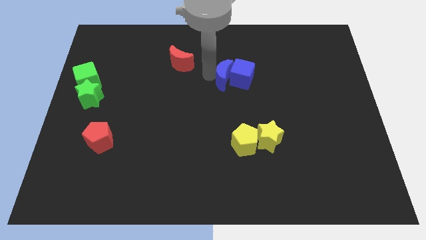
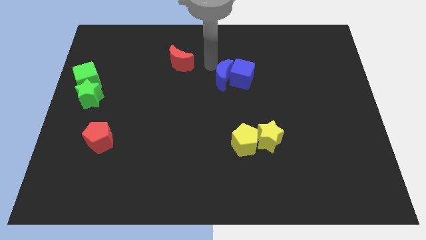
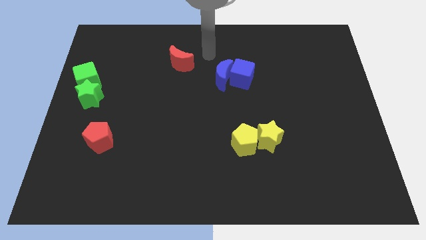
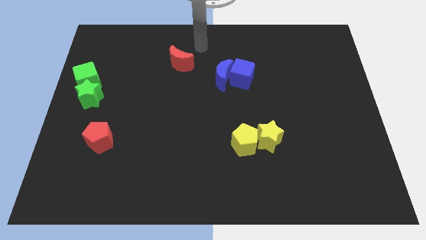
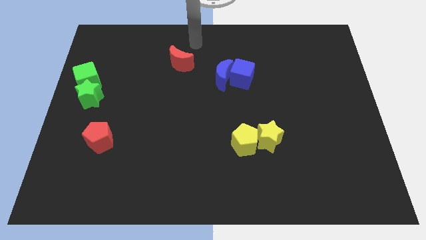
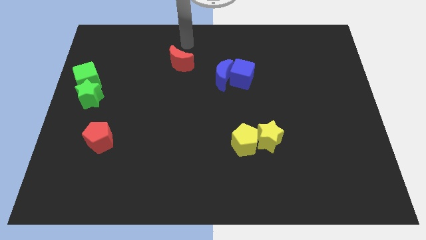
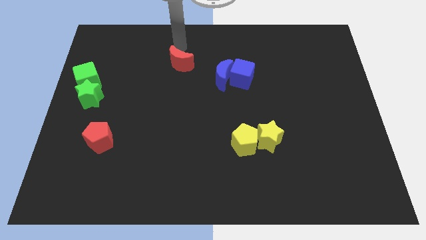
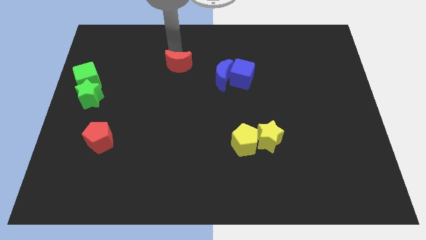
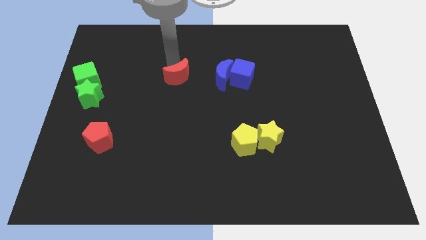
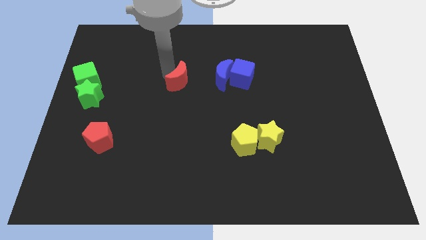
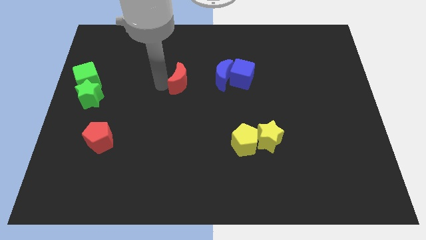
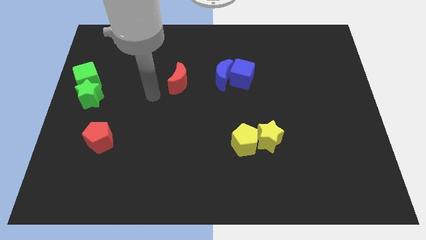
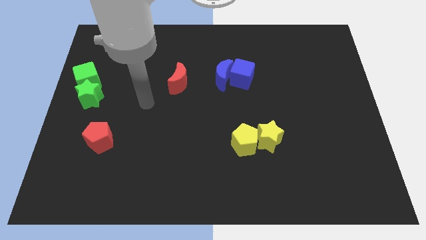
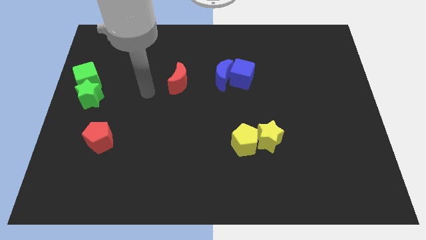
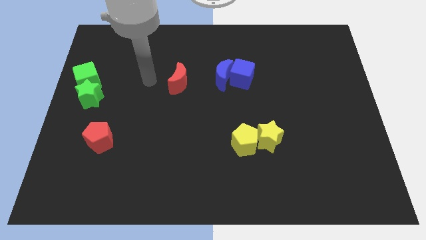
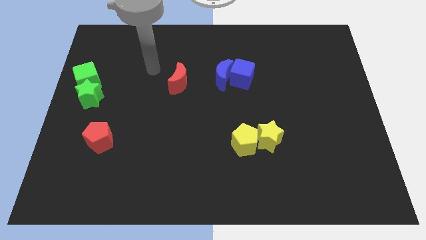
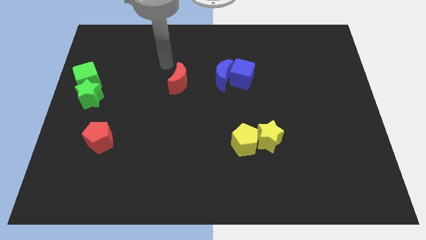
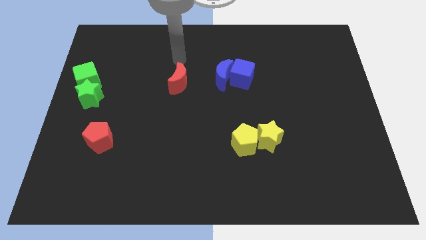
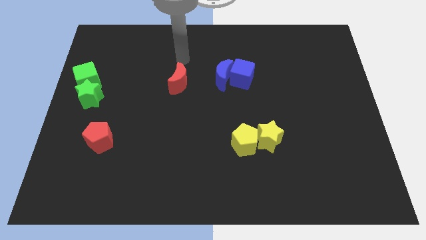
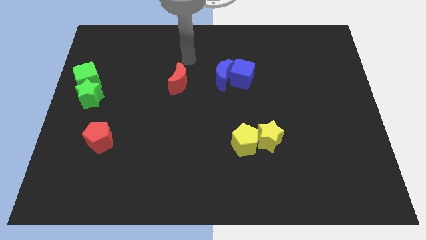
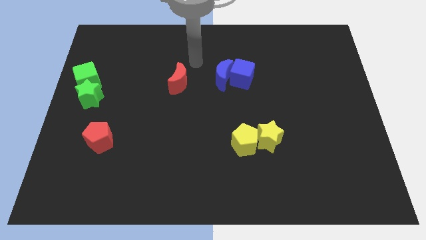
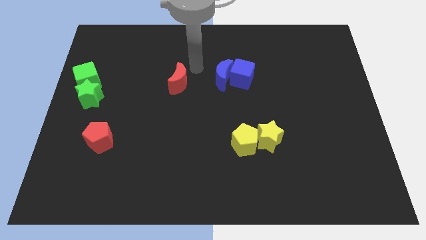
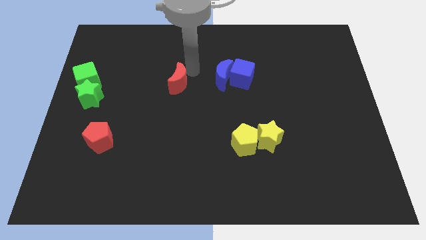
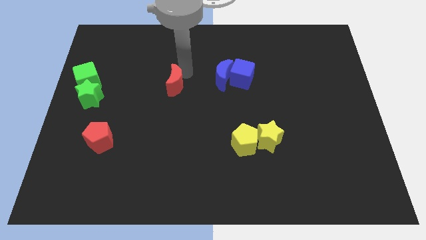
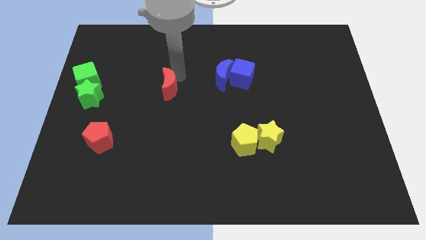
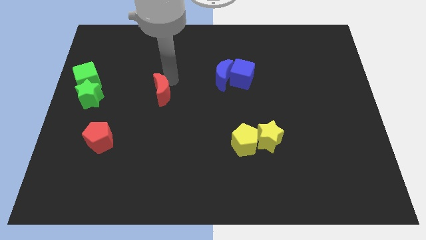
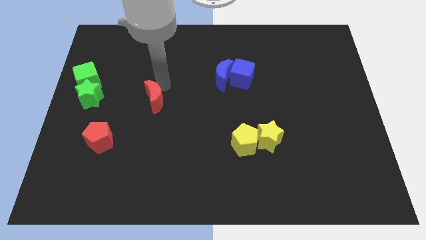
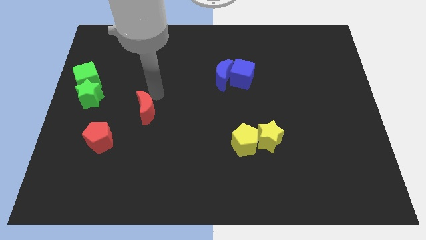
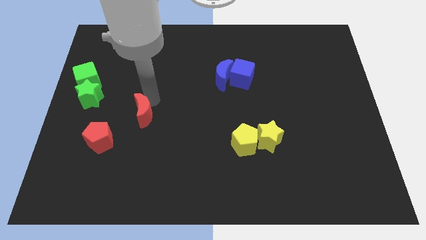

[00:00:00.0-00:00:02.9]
push the red moon towards the red pentagon

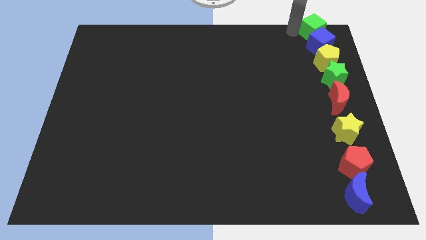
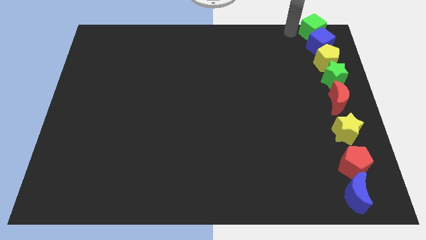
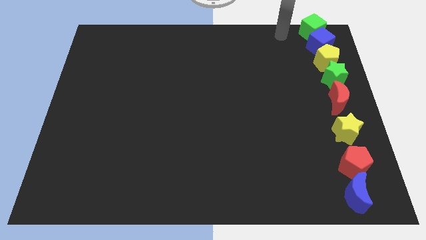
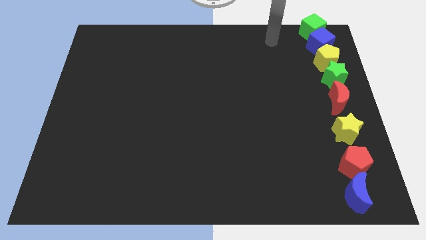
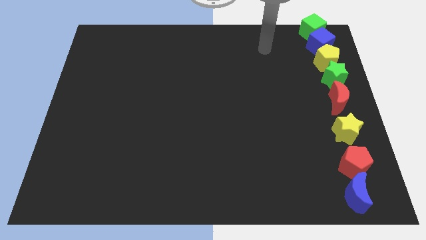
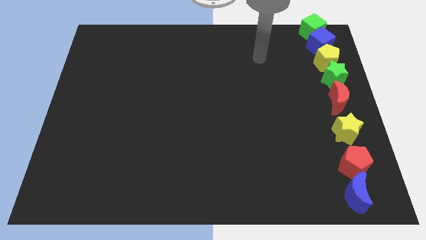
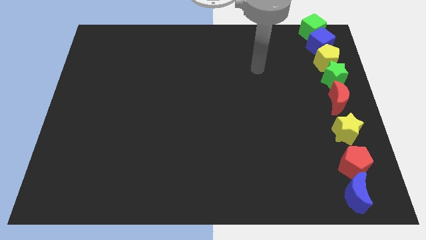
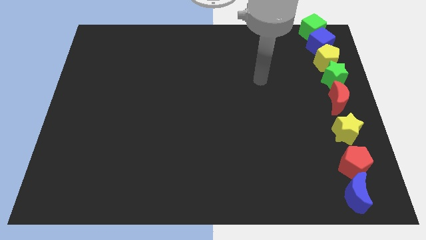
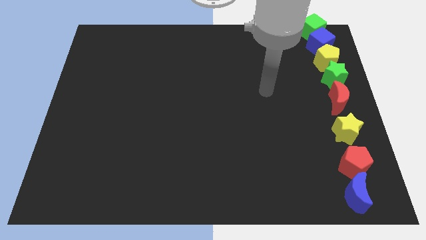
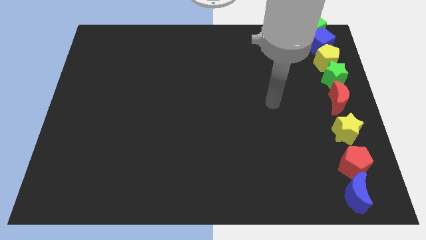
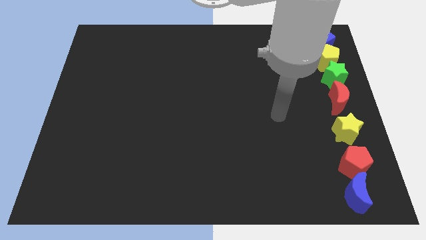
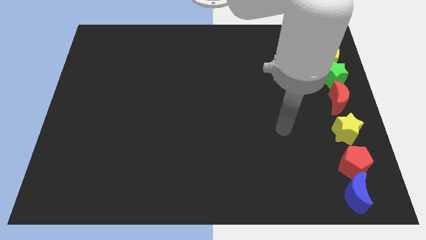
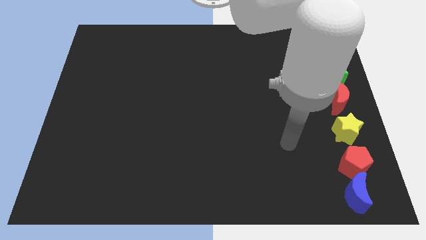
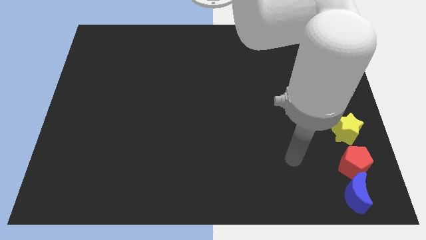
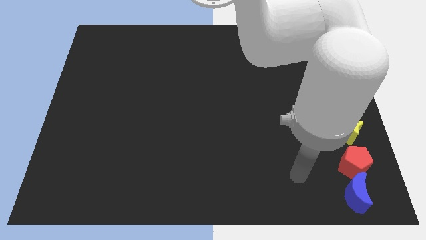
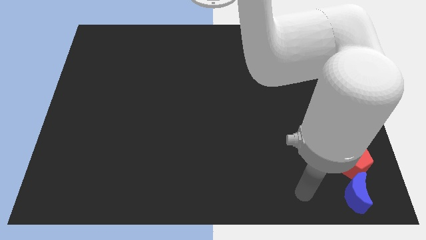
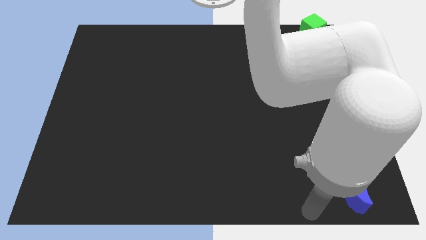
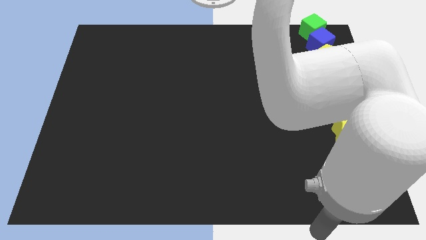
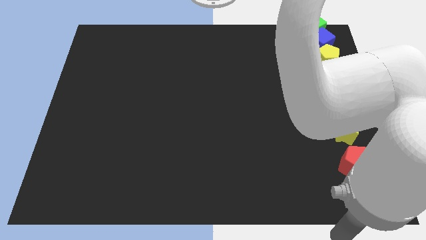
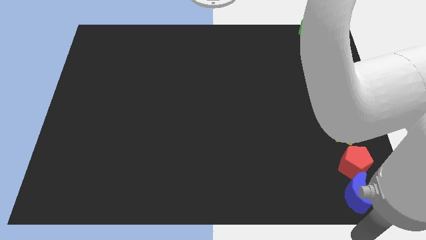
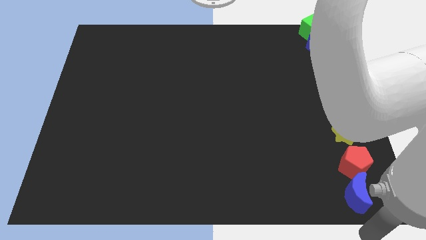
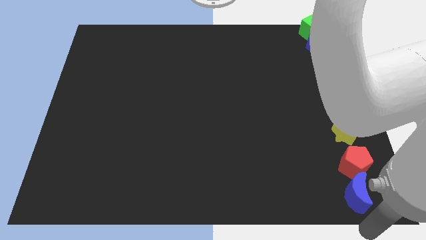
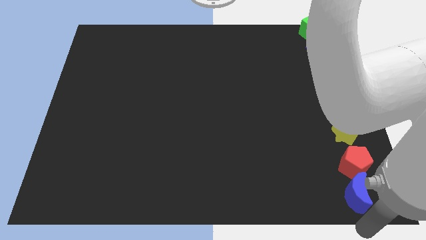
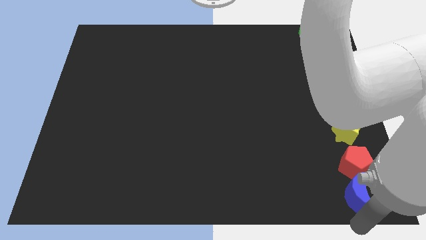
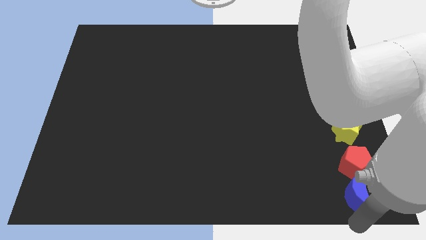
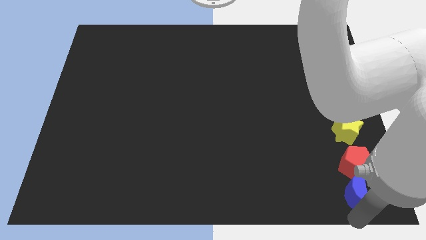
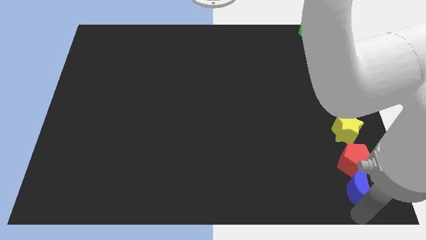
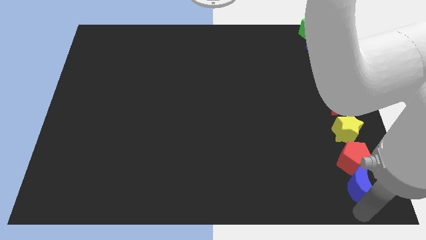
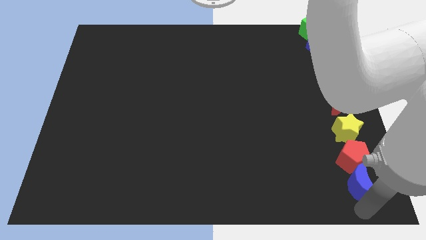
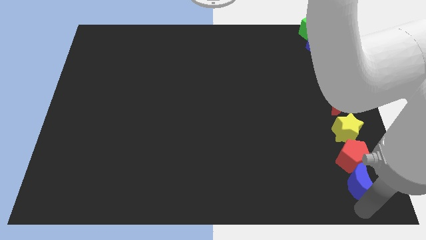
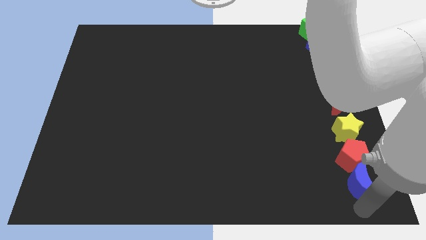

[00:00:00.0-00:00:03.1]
point your arm below blue moon

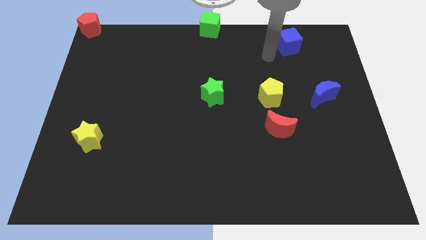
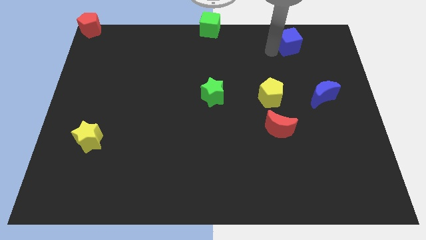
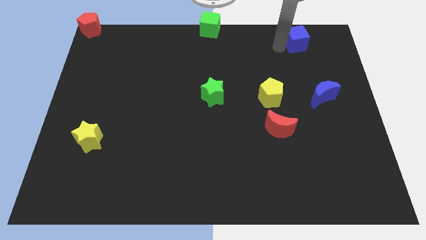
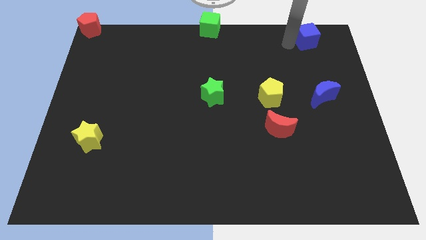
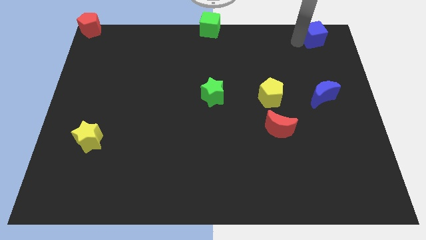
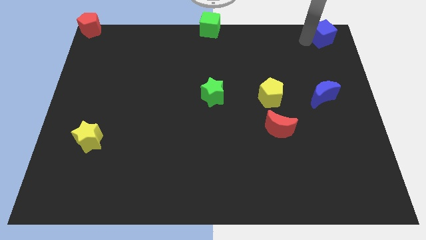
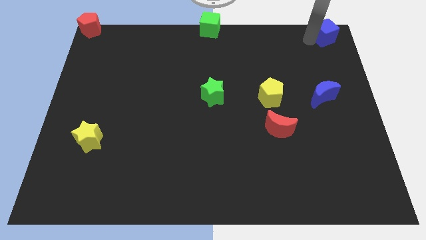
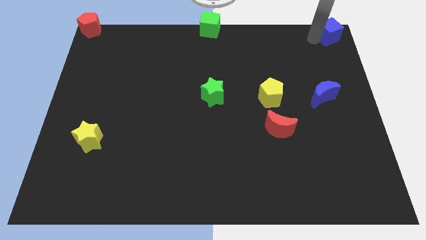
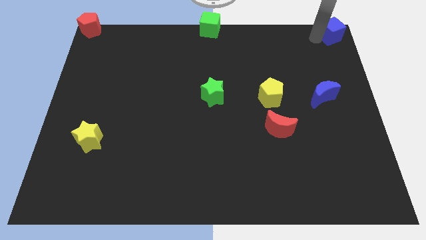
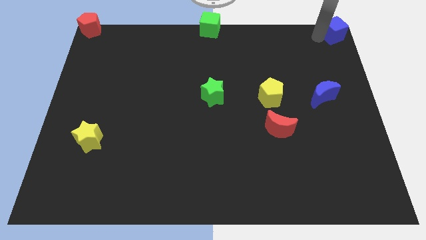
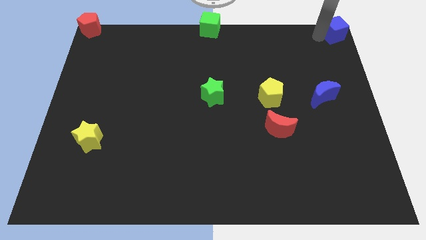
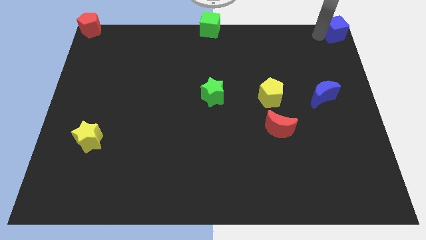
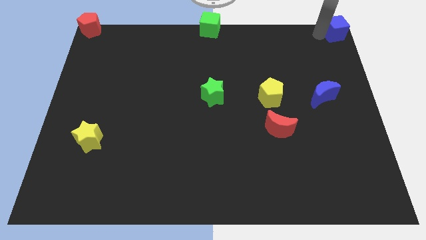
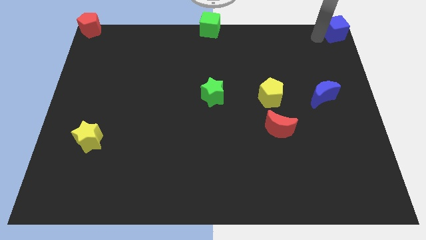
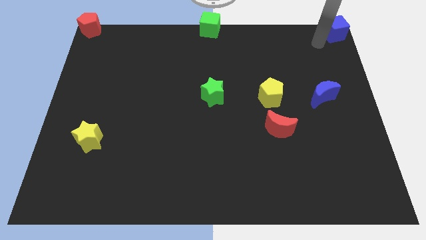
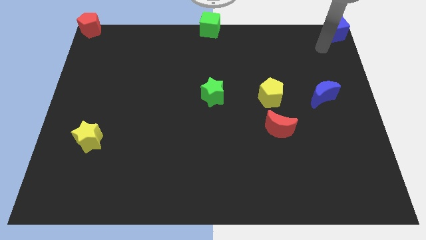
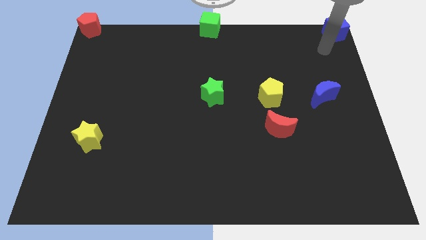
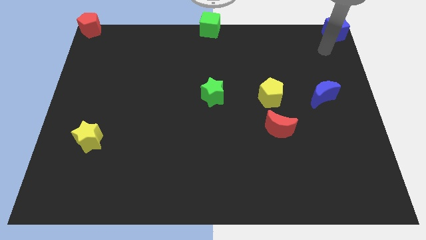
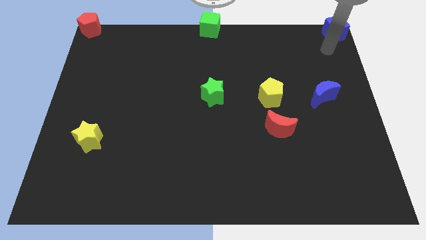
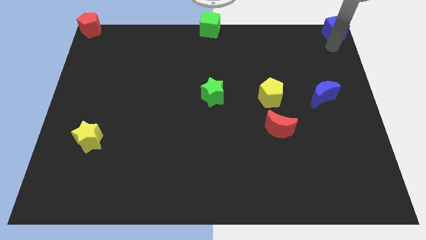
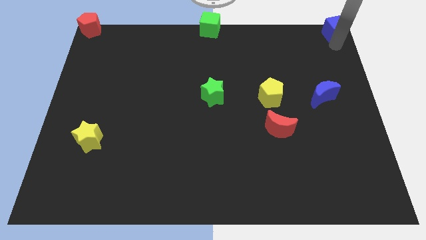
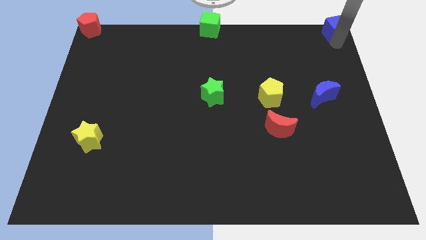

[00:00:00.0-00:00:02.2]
slide blue cube to the top right corner

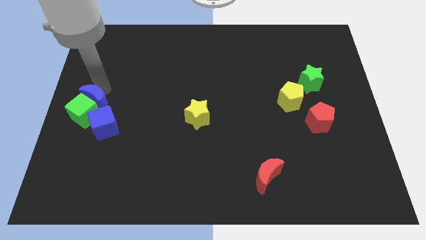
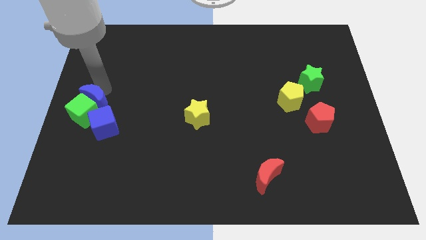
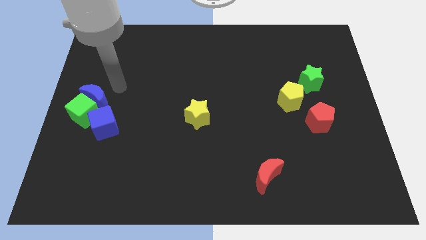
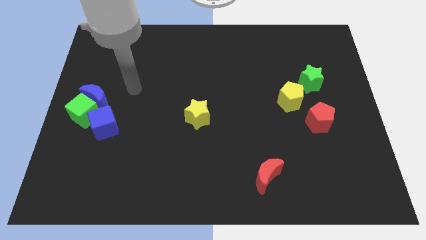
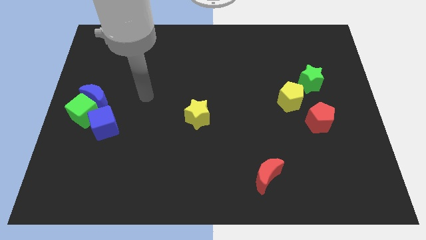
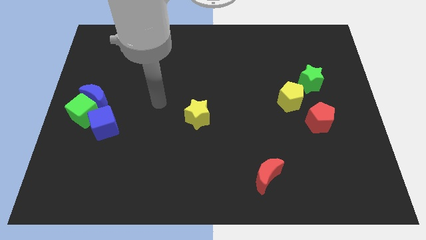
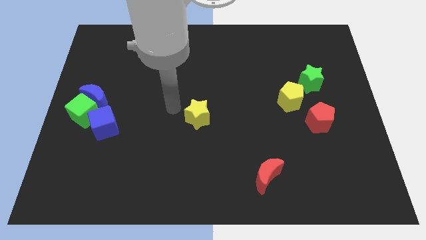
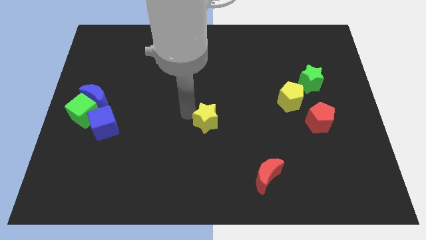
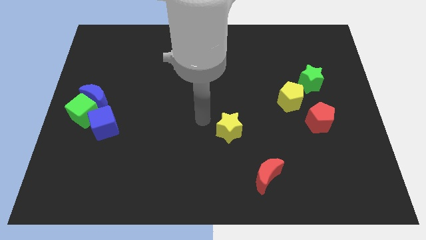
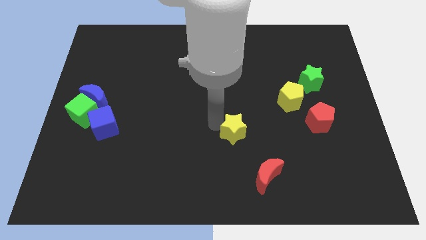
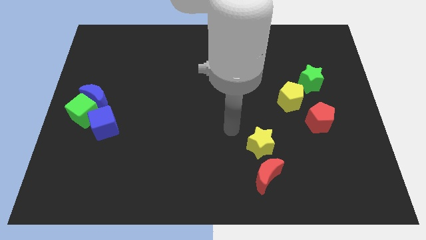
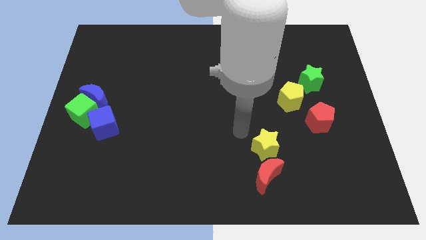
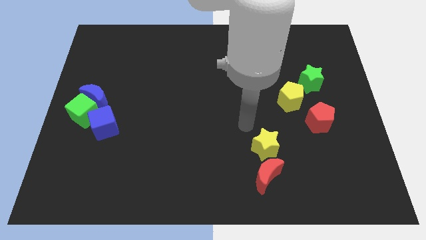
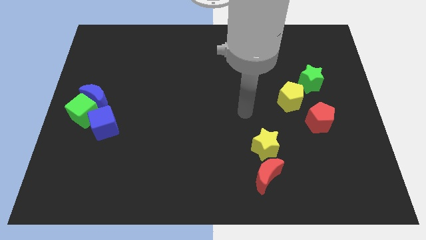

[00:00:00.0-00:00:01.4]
push the yellow star towards the red crescent
